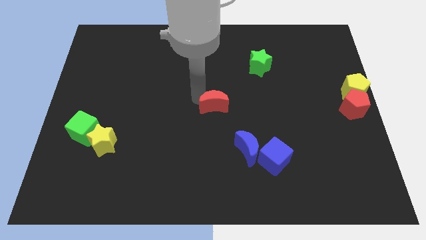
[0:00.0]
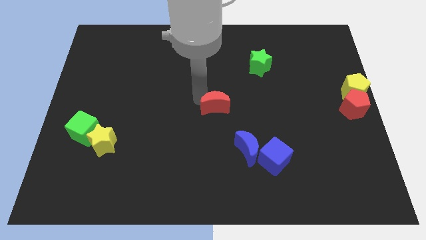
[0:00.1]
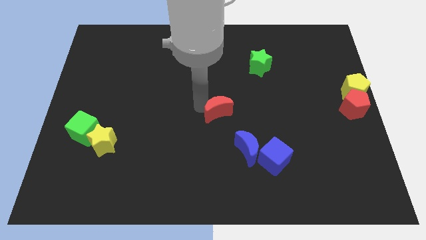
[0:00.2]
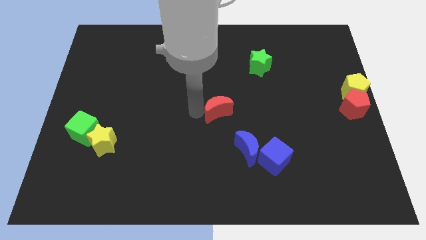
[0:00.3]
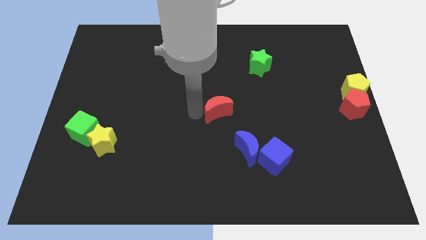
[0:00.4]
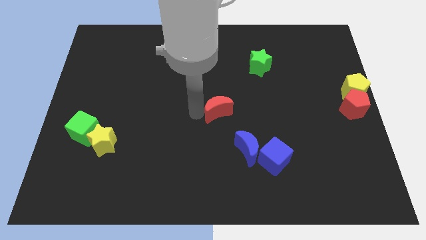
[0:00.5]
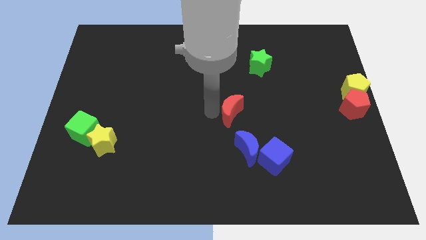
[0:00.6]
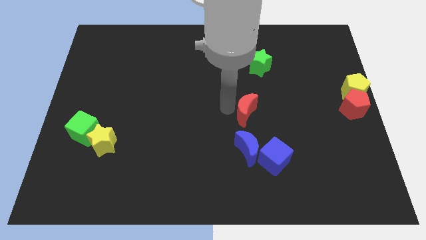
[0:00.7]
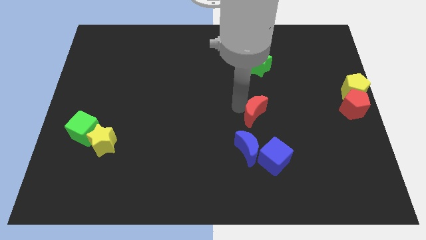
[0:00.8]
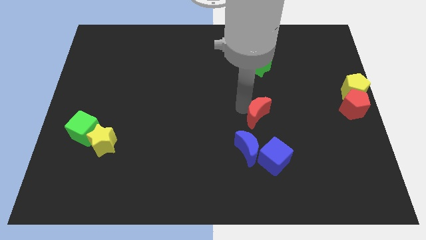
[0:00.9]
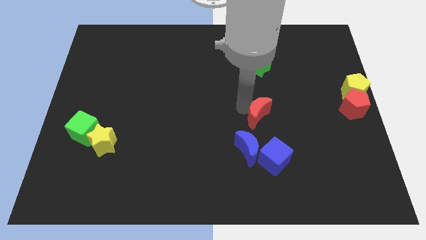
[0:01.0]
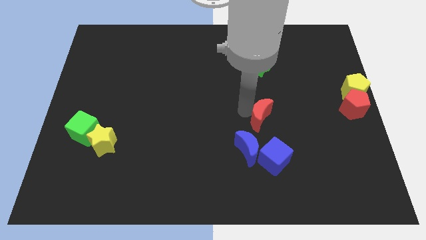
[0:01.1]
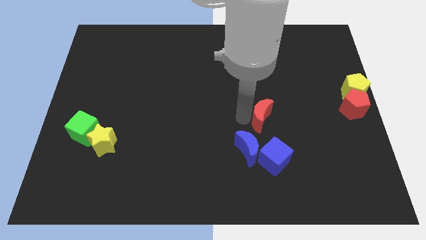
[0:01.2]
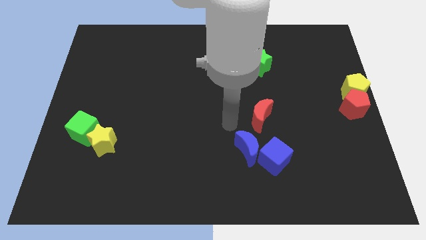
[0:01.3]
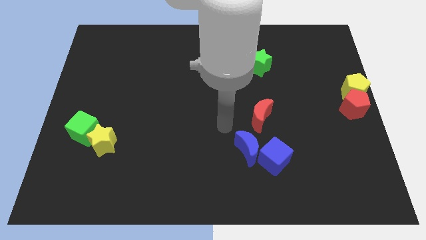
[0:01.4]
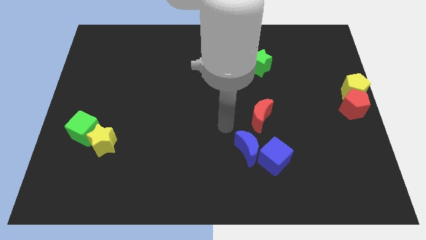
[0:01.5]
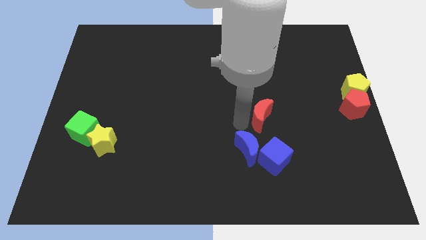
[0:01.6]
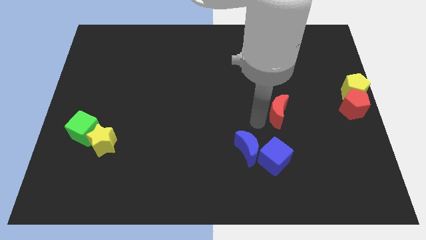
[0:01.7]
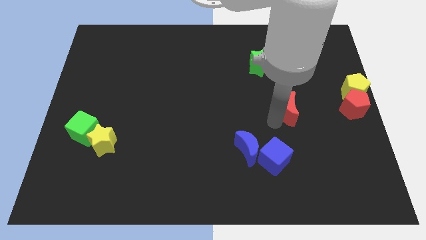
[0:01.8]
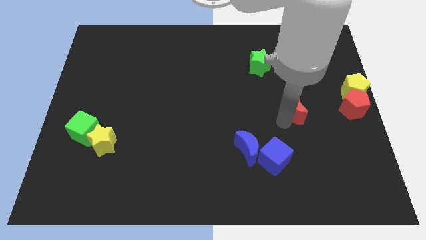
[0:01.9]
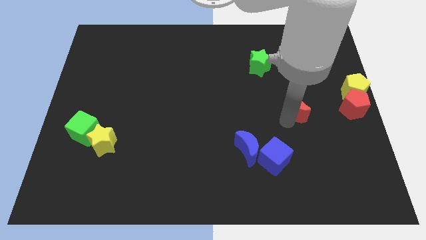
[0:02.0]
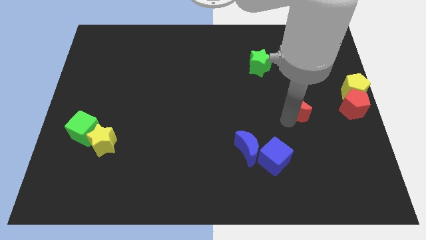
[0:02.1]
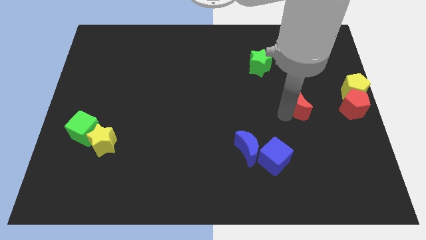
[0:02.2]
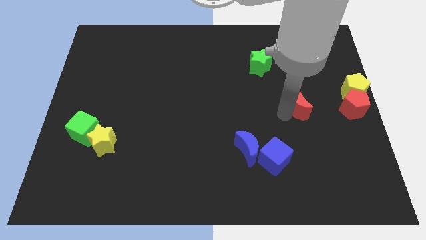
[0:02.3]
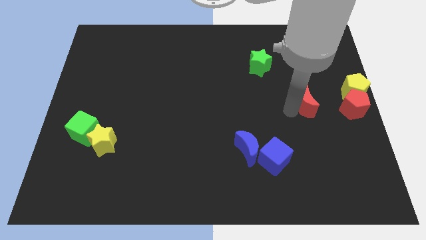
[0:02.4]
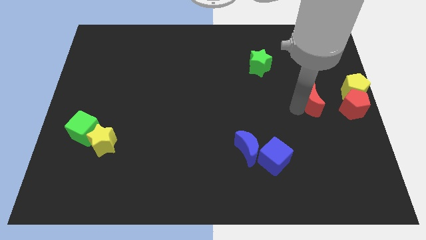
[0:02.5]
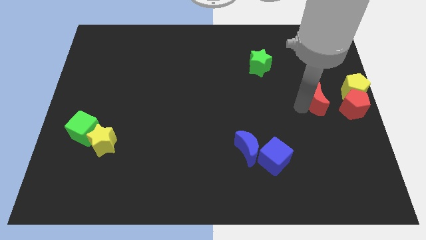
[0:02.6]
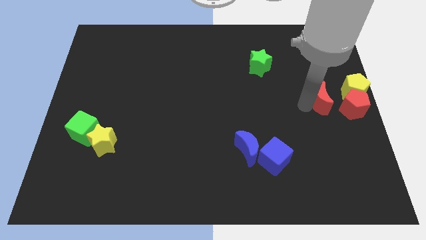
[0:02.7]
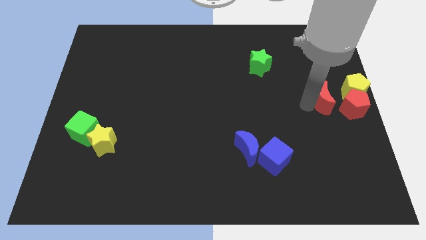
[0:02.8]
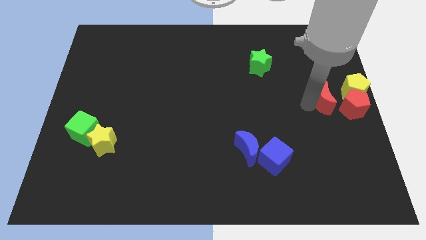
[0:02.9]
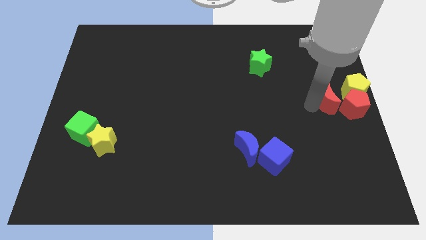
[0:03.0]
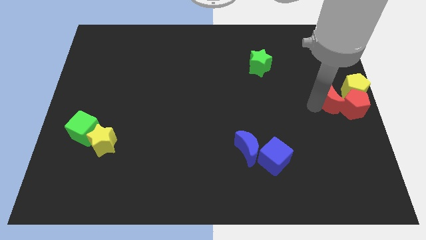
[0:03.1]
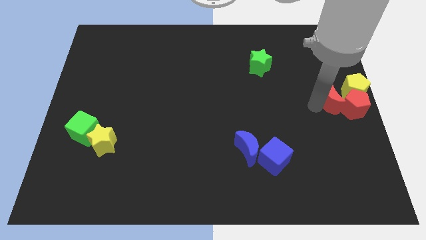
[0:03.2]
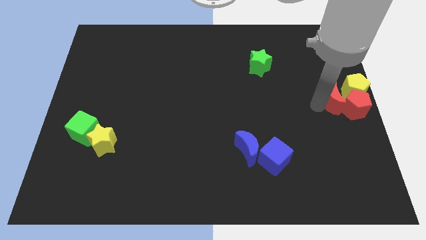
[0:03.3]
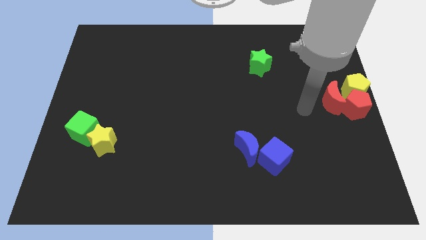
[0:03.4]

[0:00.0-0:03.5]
move the red moon to the left of the yellow pentagon and red pentagon

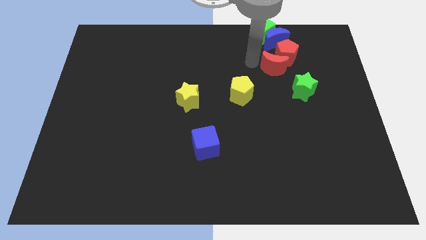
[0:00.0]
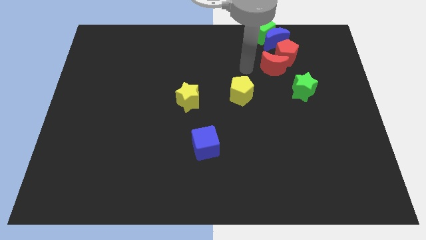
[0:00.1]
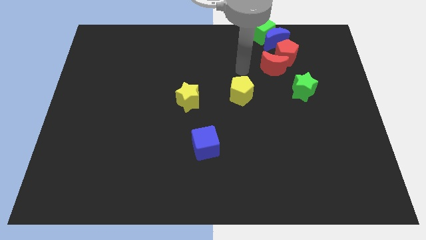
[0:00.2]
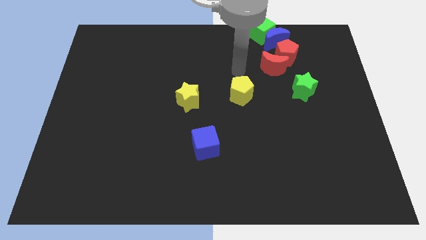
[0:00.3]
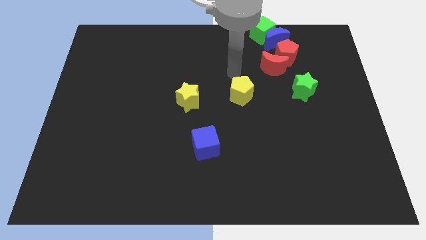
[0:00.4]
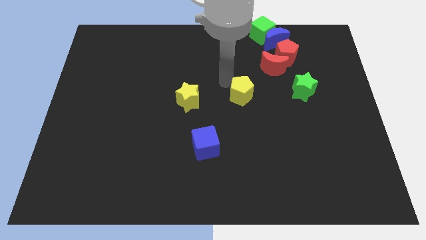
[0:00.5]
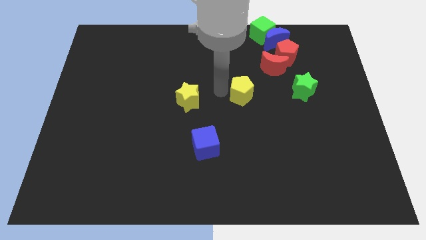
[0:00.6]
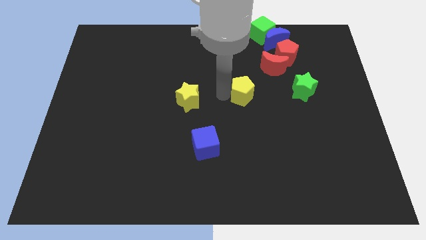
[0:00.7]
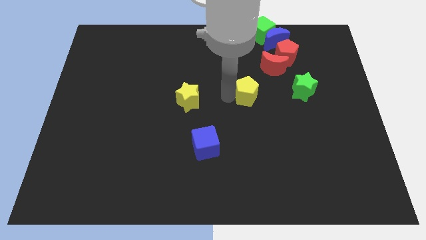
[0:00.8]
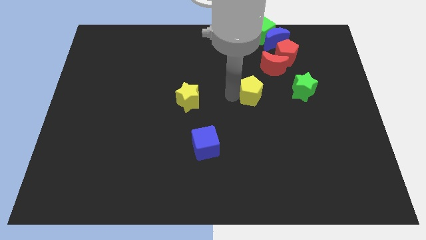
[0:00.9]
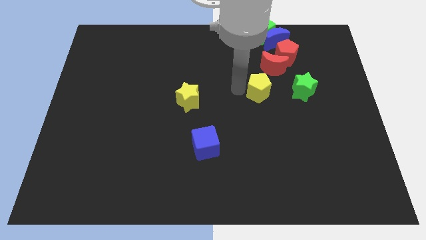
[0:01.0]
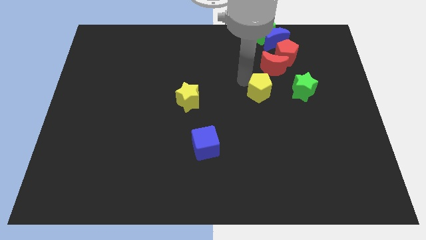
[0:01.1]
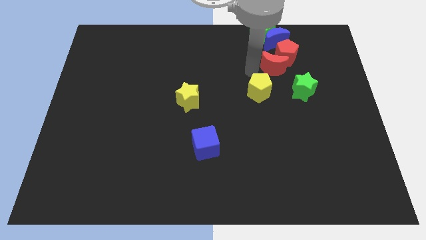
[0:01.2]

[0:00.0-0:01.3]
place the yellow pentagon parallel to green star

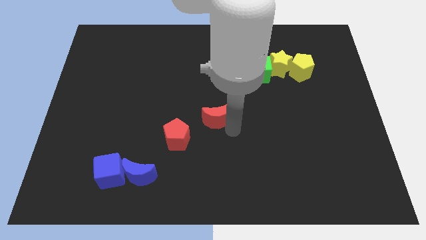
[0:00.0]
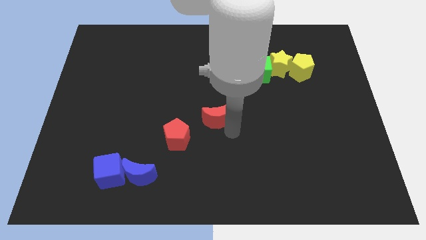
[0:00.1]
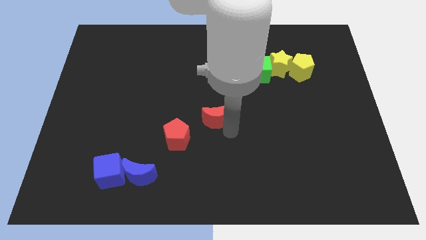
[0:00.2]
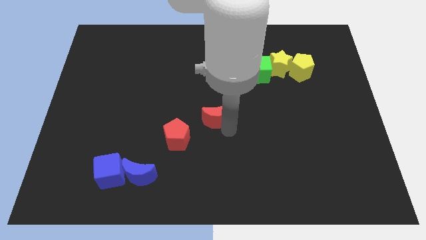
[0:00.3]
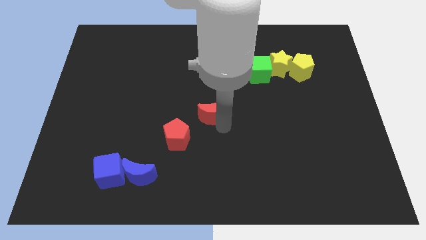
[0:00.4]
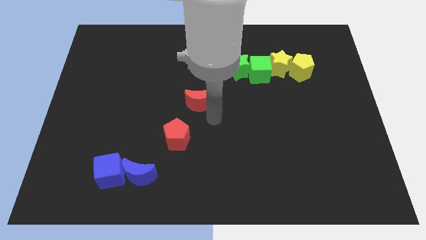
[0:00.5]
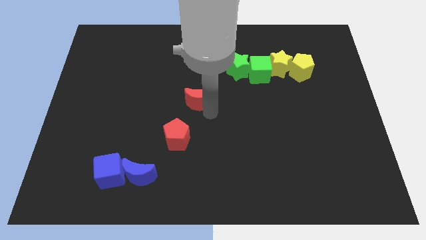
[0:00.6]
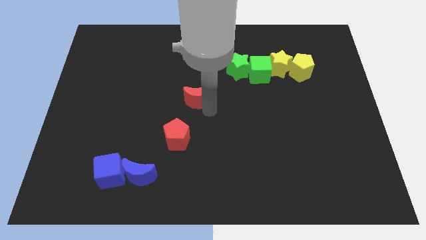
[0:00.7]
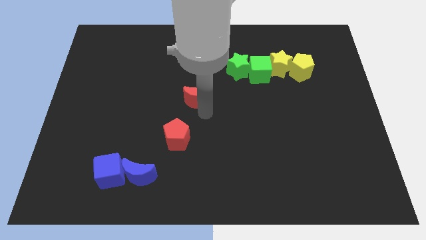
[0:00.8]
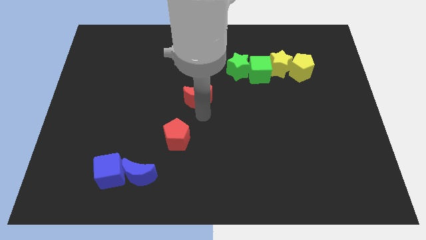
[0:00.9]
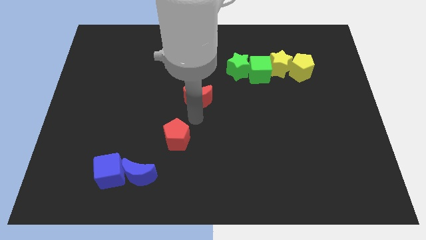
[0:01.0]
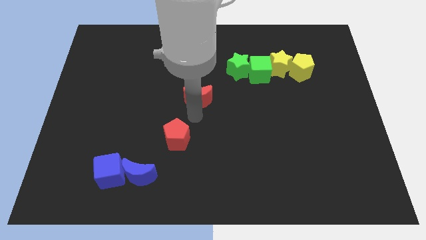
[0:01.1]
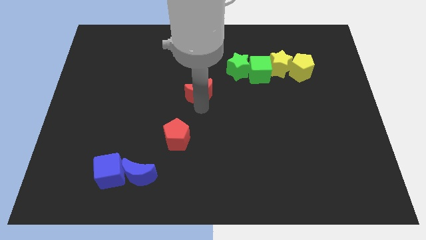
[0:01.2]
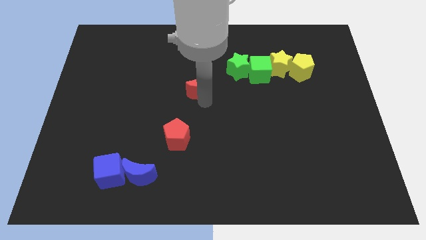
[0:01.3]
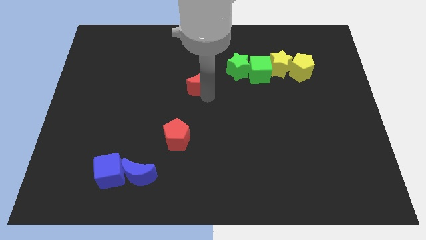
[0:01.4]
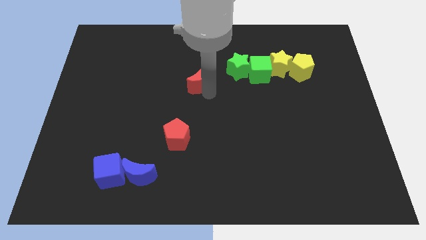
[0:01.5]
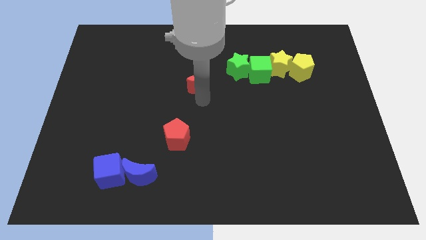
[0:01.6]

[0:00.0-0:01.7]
move red moon in the center

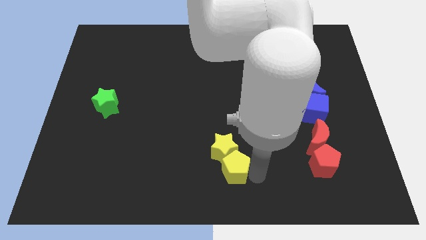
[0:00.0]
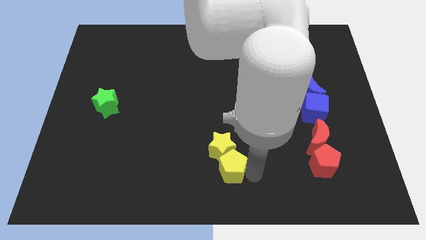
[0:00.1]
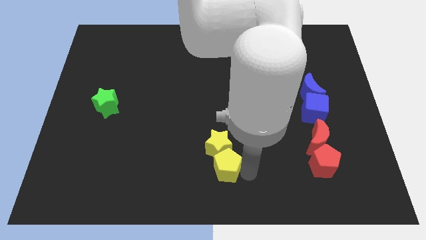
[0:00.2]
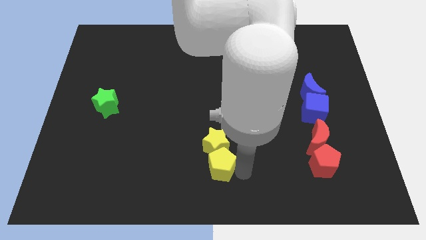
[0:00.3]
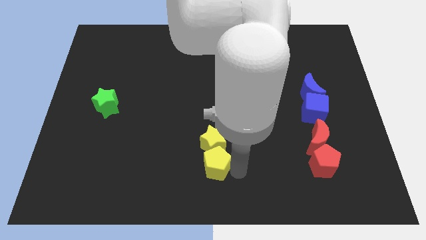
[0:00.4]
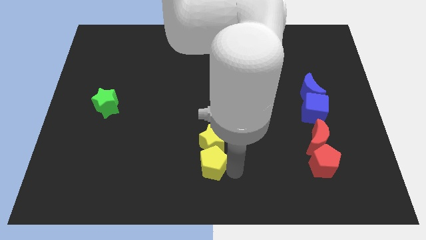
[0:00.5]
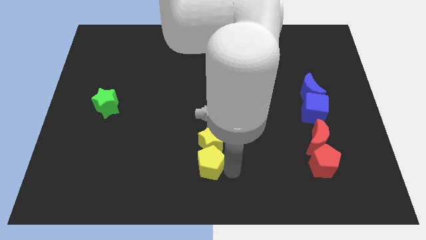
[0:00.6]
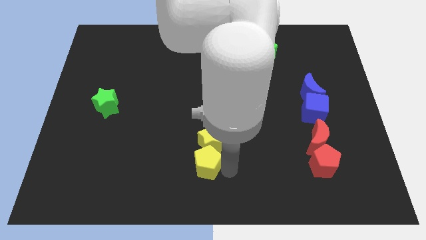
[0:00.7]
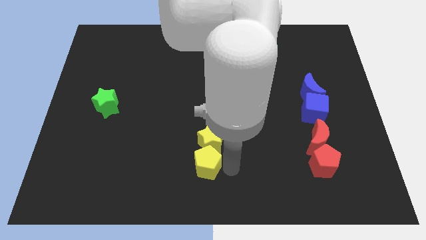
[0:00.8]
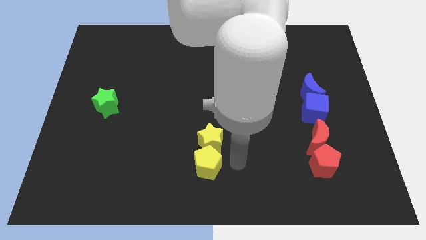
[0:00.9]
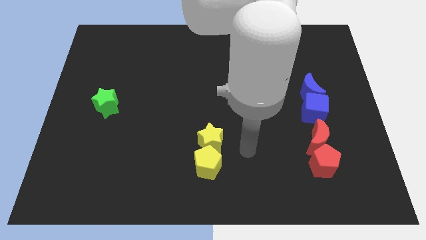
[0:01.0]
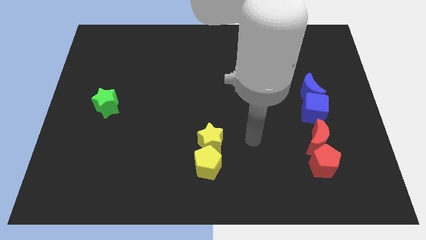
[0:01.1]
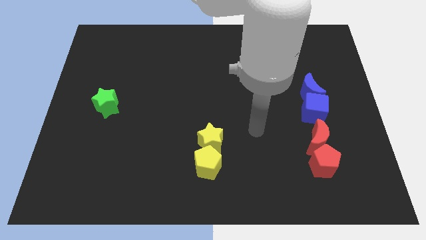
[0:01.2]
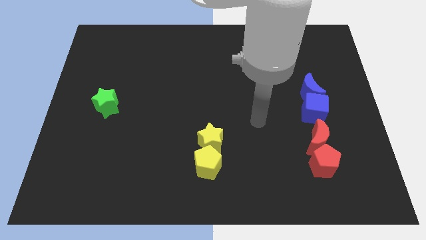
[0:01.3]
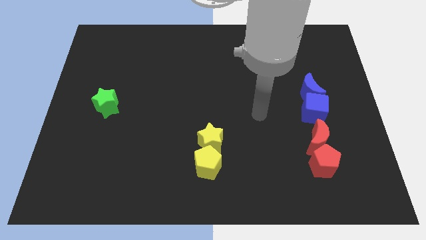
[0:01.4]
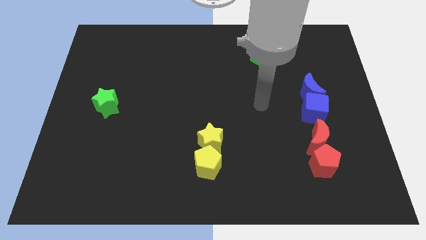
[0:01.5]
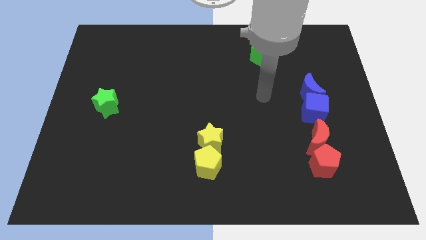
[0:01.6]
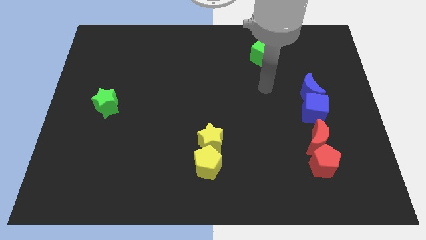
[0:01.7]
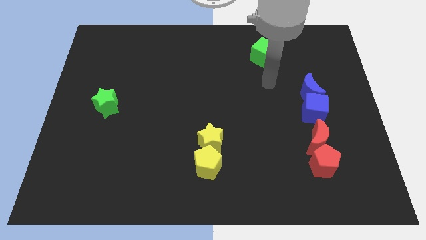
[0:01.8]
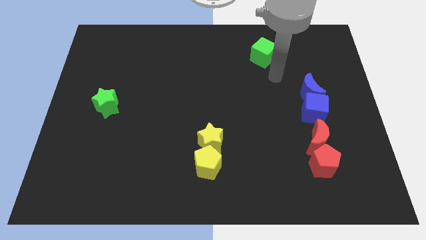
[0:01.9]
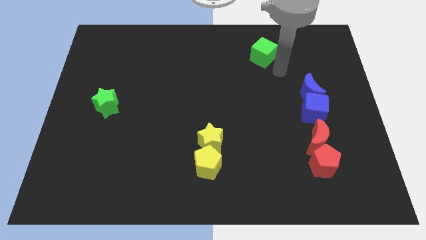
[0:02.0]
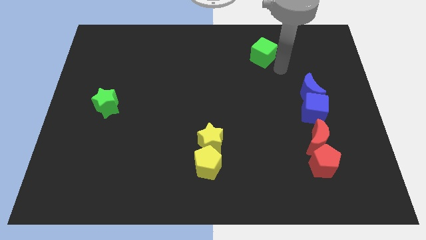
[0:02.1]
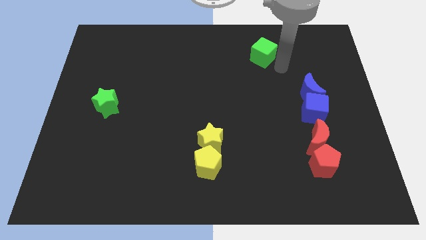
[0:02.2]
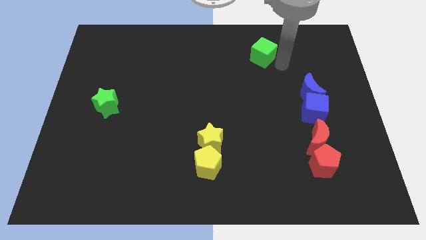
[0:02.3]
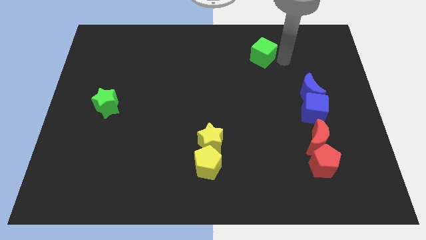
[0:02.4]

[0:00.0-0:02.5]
slightly touch the yellow pentagon and move the arm near to green cube
